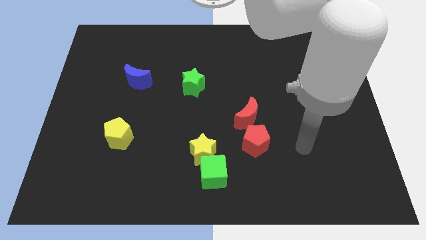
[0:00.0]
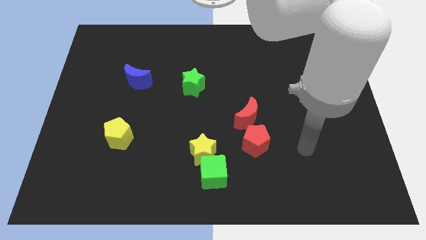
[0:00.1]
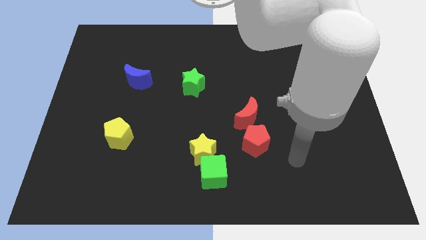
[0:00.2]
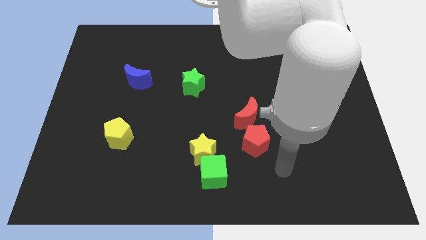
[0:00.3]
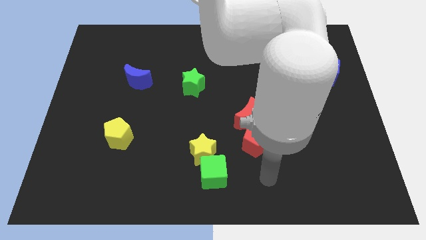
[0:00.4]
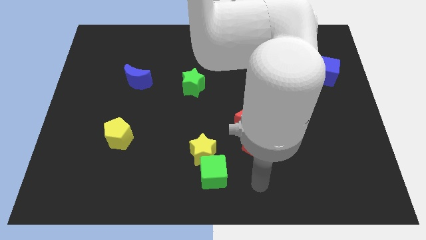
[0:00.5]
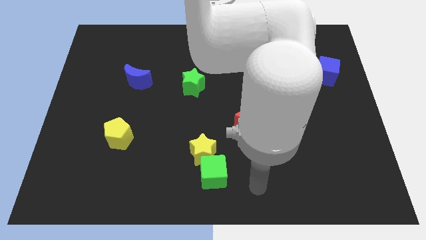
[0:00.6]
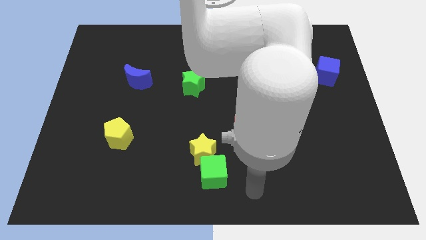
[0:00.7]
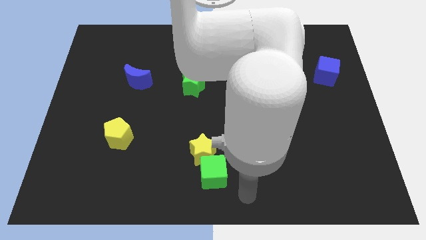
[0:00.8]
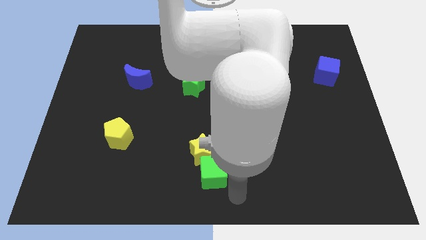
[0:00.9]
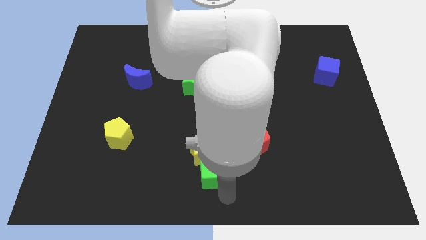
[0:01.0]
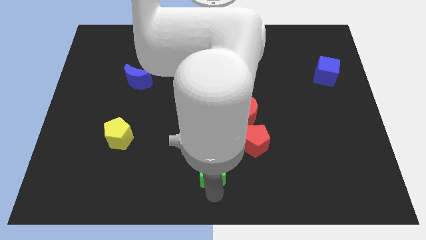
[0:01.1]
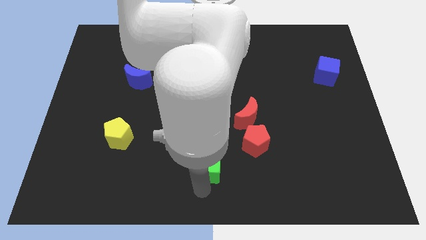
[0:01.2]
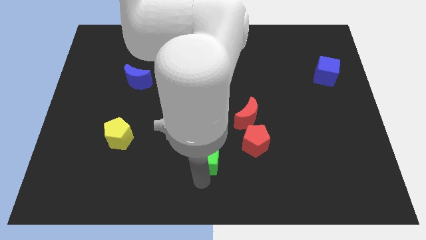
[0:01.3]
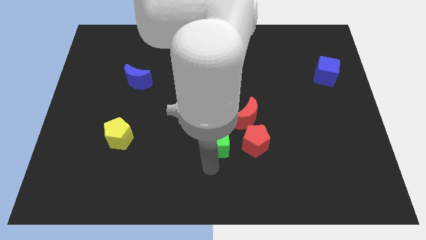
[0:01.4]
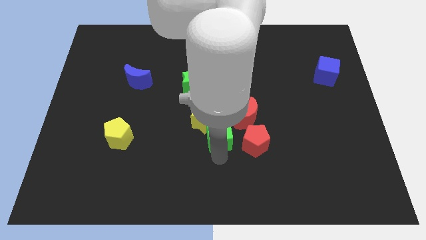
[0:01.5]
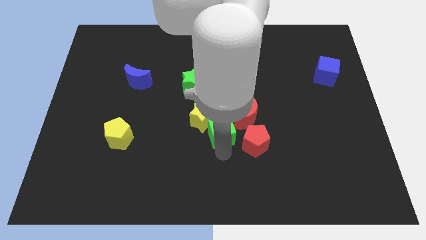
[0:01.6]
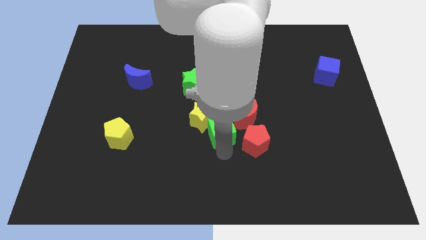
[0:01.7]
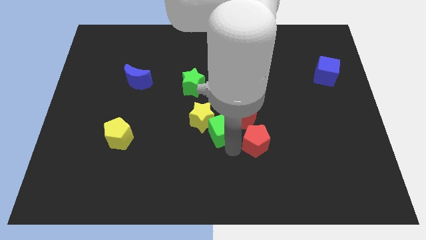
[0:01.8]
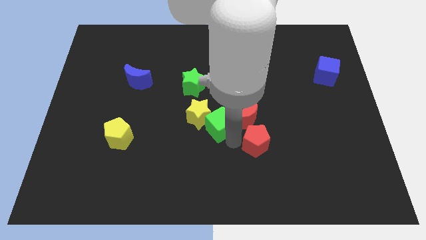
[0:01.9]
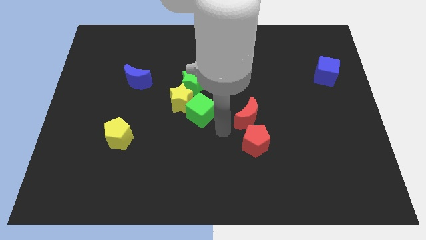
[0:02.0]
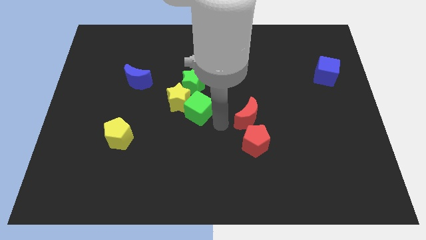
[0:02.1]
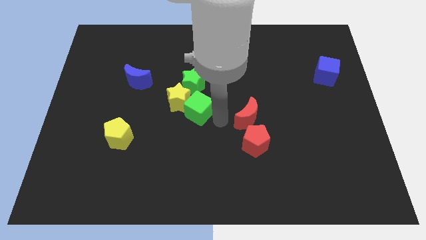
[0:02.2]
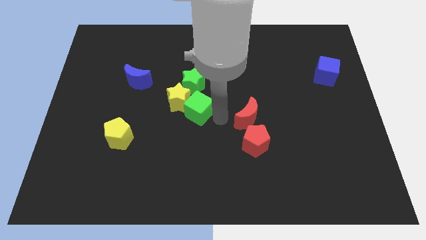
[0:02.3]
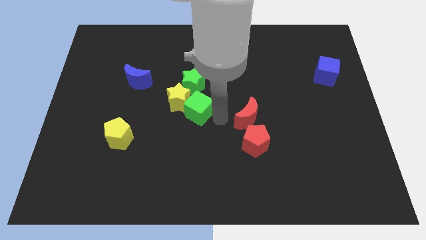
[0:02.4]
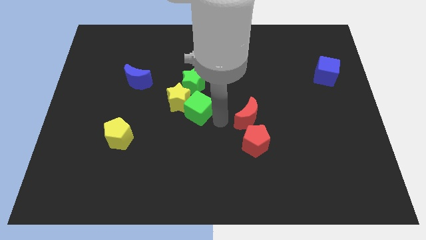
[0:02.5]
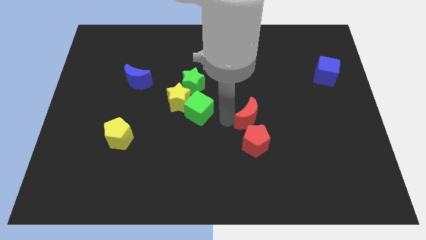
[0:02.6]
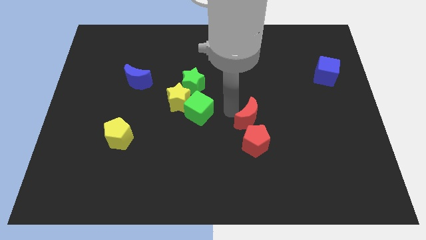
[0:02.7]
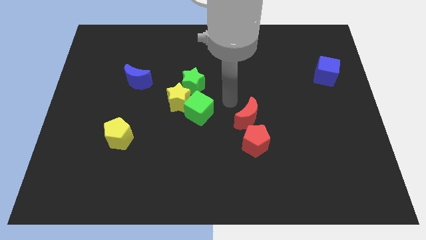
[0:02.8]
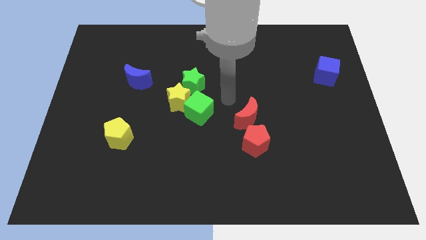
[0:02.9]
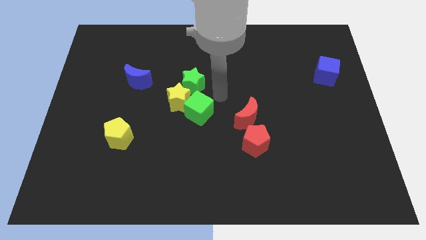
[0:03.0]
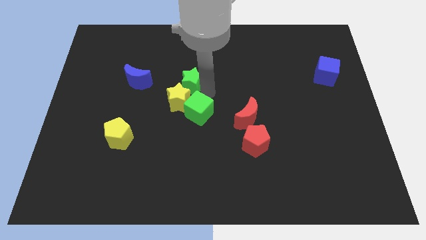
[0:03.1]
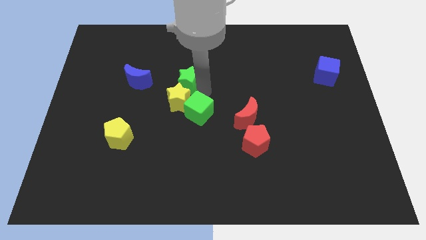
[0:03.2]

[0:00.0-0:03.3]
move the green cube to the center of the board

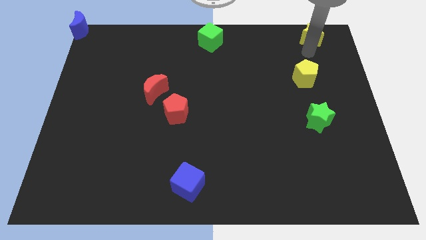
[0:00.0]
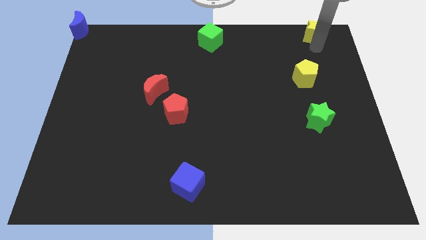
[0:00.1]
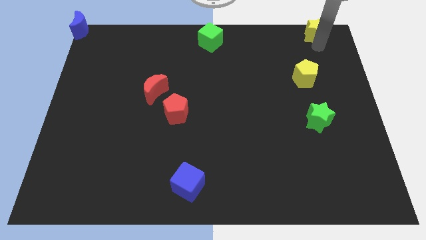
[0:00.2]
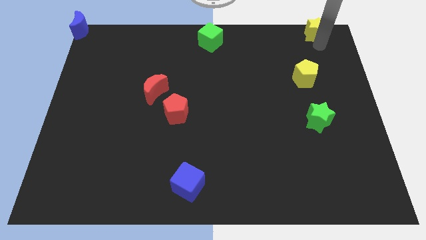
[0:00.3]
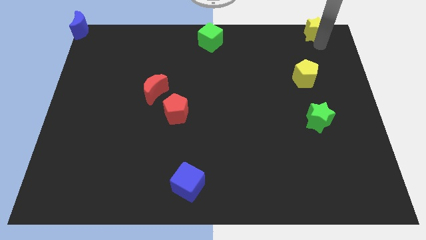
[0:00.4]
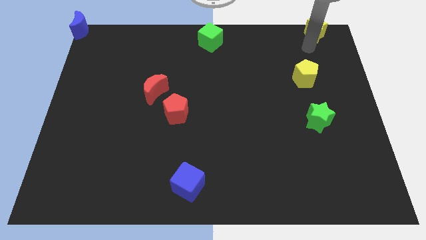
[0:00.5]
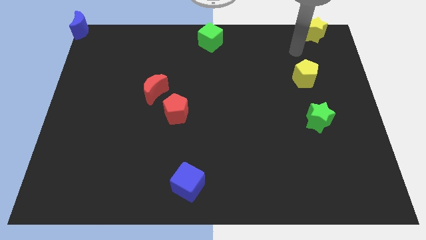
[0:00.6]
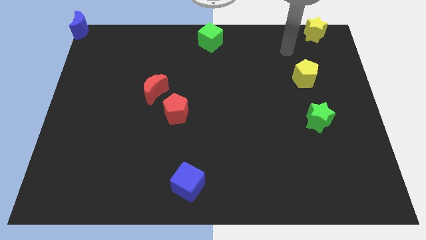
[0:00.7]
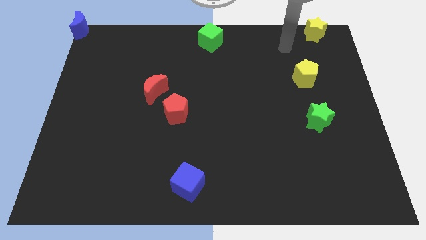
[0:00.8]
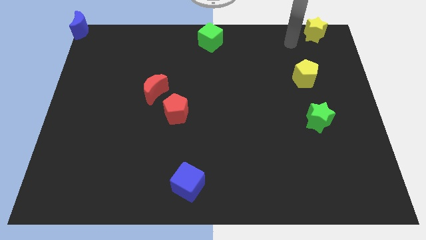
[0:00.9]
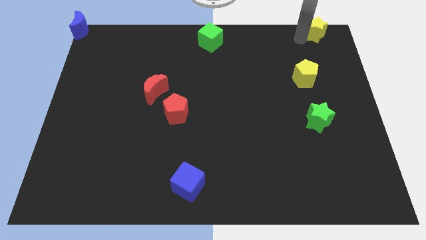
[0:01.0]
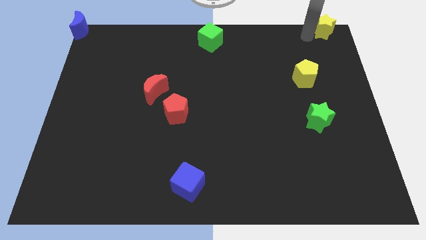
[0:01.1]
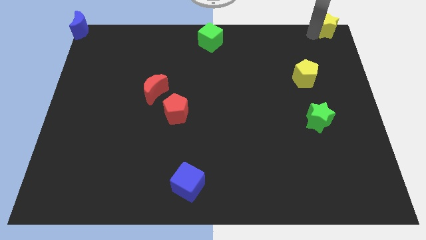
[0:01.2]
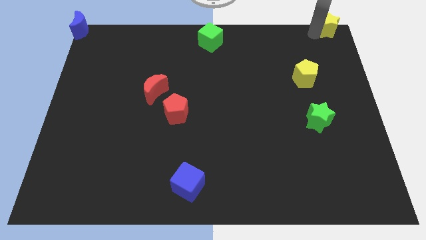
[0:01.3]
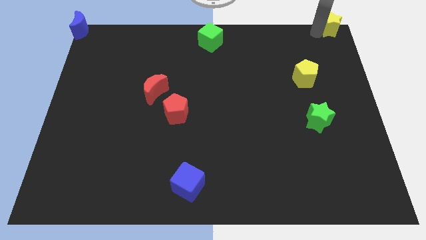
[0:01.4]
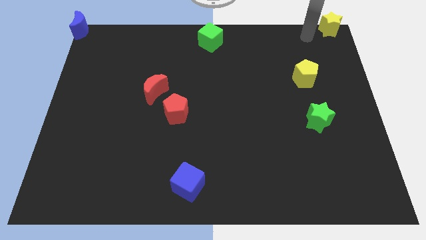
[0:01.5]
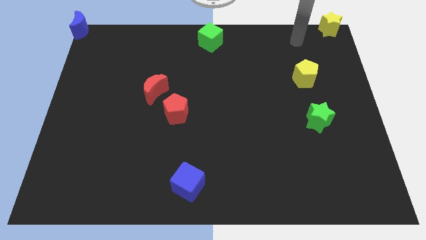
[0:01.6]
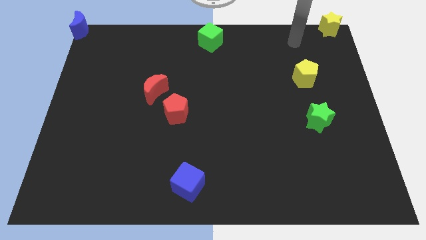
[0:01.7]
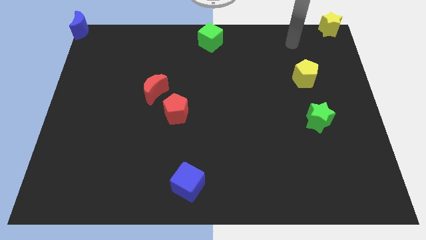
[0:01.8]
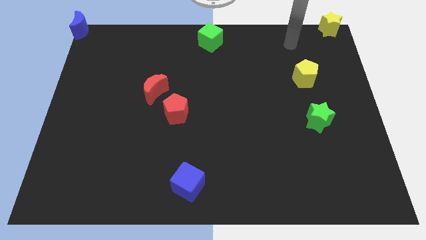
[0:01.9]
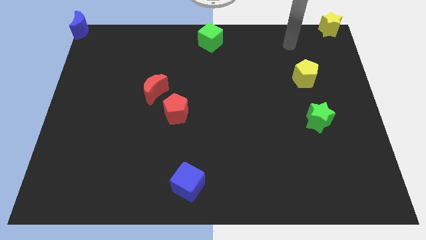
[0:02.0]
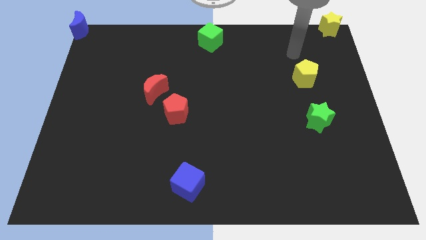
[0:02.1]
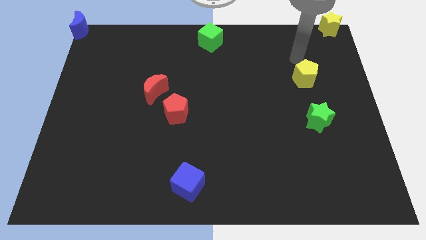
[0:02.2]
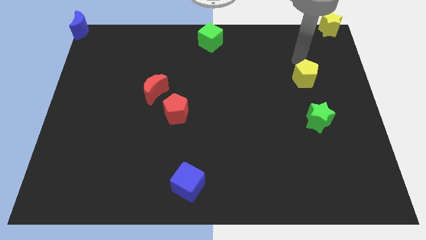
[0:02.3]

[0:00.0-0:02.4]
push yellow star to the right corner of the board

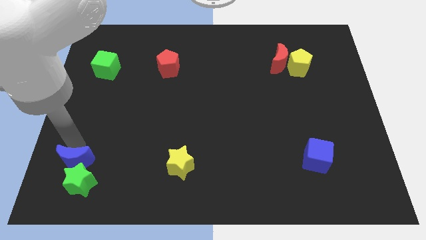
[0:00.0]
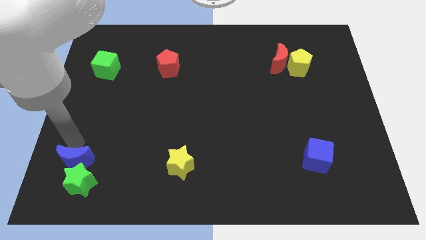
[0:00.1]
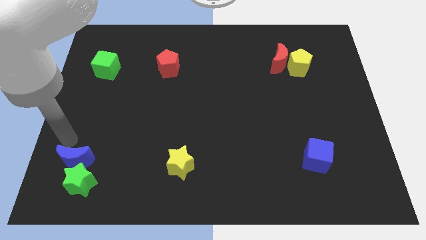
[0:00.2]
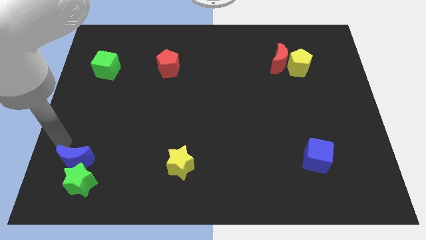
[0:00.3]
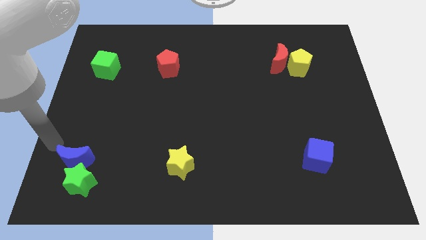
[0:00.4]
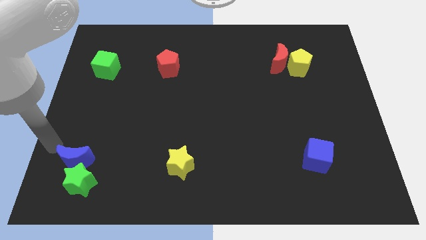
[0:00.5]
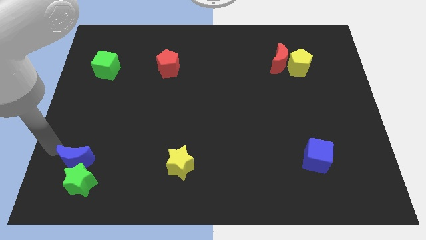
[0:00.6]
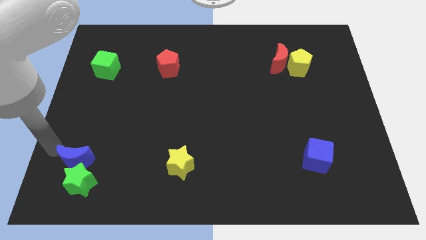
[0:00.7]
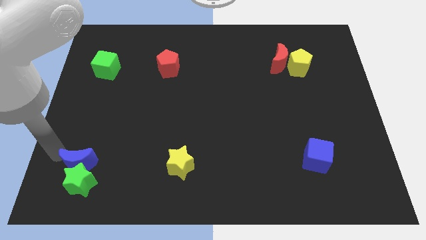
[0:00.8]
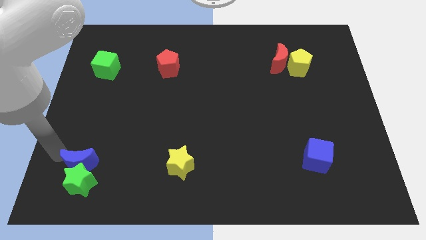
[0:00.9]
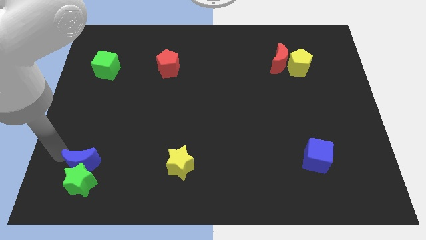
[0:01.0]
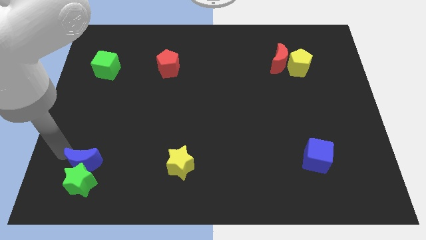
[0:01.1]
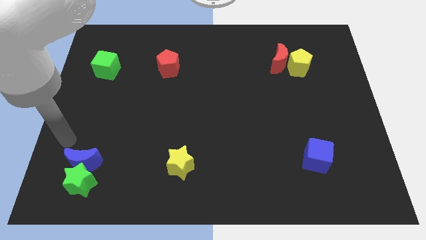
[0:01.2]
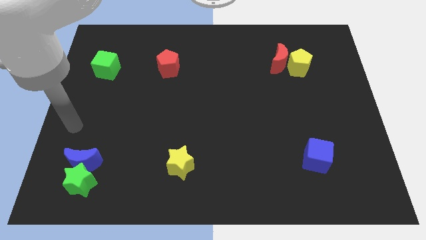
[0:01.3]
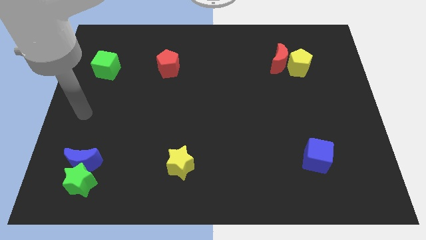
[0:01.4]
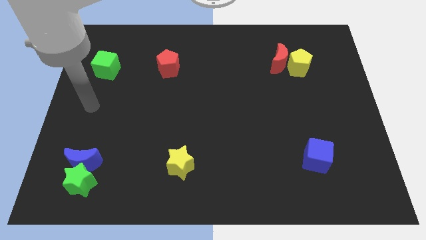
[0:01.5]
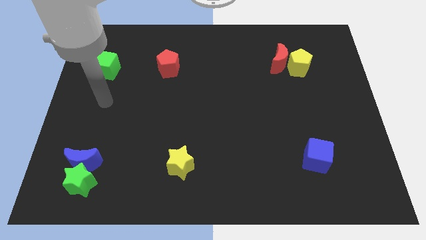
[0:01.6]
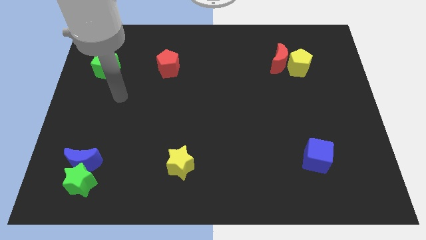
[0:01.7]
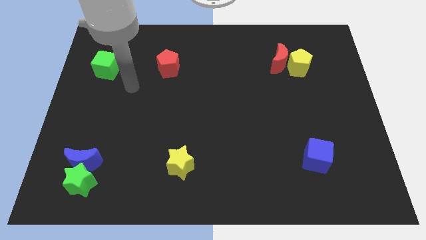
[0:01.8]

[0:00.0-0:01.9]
move the blue moon into the green star

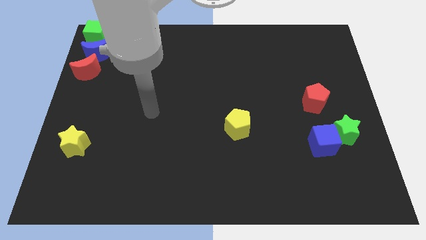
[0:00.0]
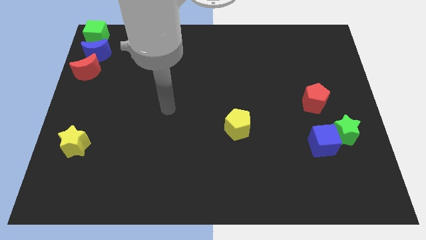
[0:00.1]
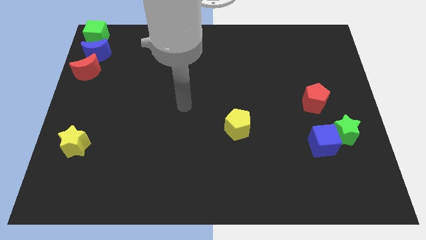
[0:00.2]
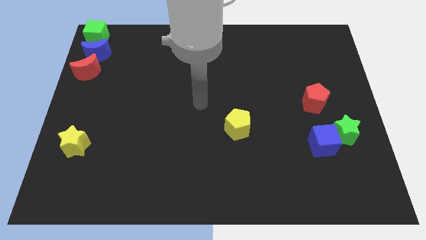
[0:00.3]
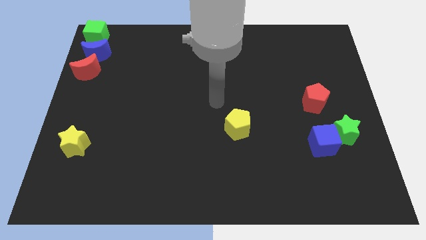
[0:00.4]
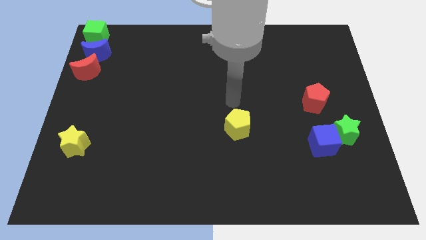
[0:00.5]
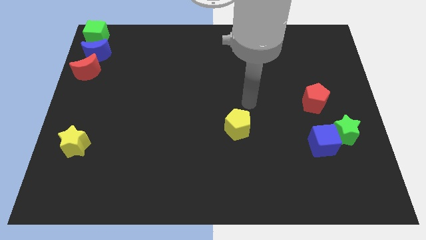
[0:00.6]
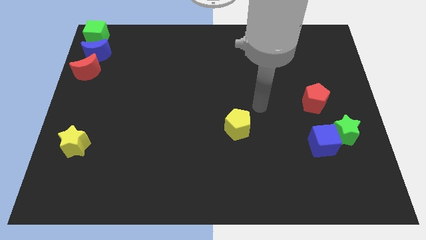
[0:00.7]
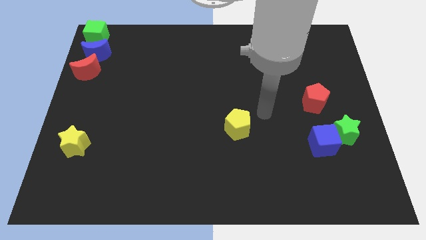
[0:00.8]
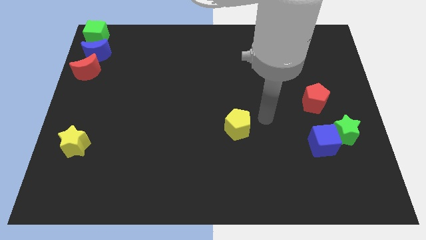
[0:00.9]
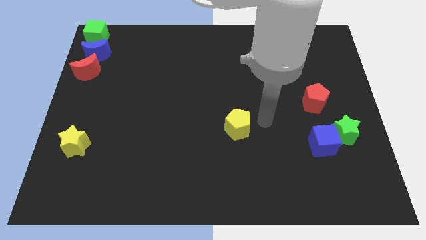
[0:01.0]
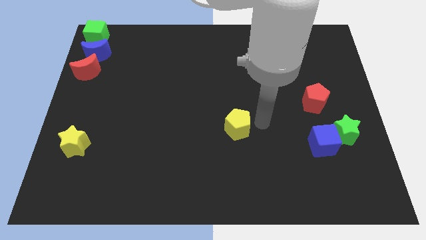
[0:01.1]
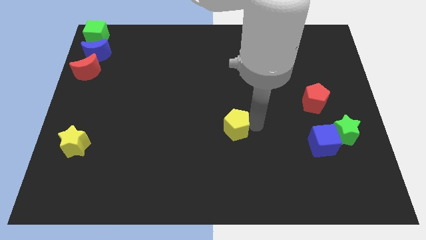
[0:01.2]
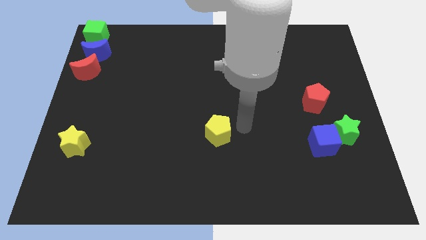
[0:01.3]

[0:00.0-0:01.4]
tap the yellow pentagon

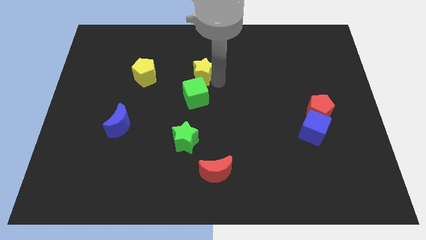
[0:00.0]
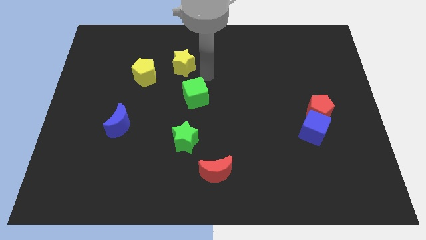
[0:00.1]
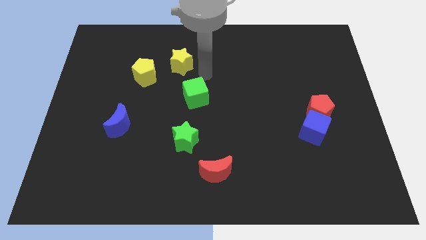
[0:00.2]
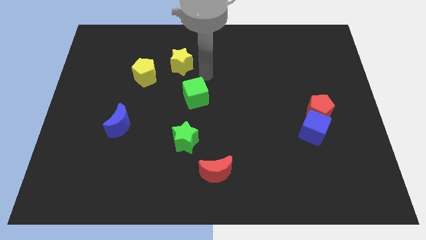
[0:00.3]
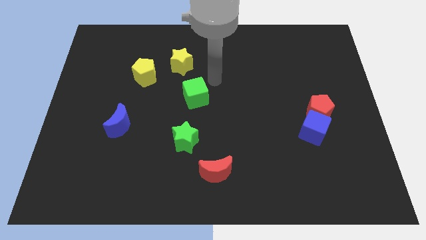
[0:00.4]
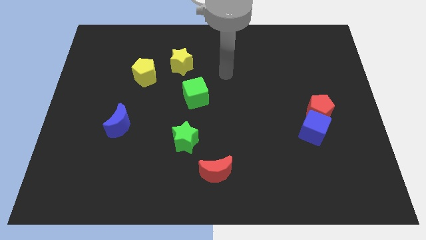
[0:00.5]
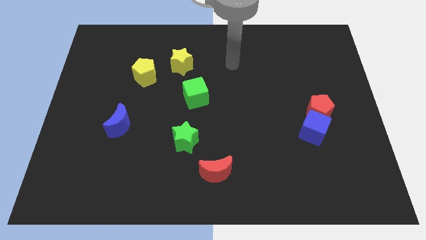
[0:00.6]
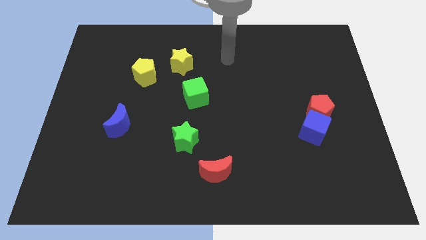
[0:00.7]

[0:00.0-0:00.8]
push the yellow star towards the top side of the board
